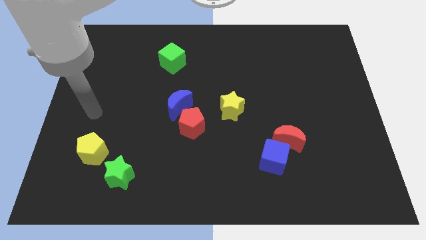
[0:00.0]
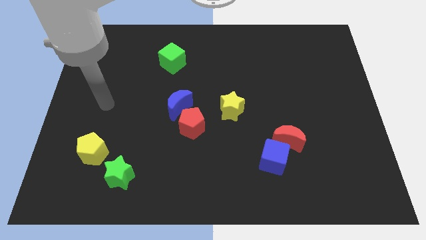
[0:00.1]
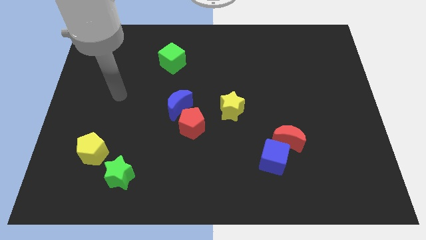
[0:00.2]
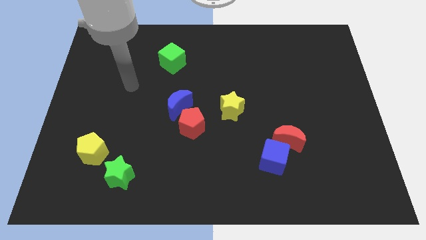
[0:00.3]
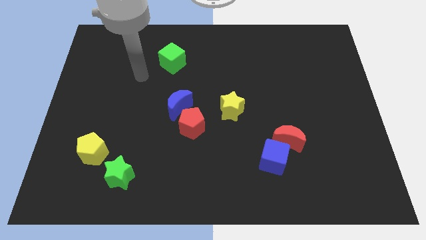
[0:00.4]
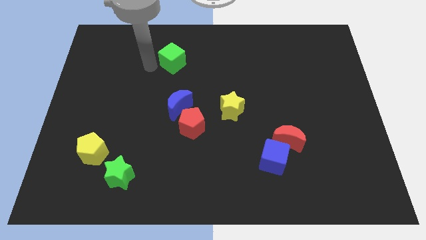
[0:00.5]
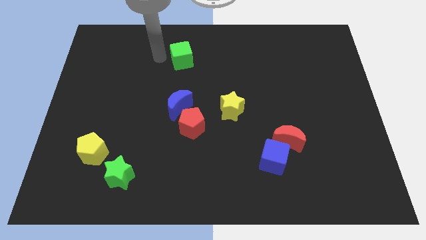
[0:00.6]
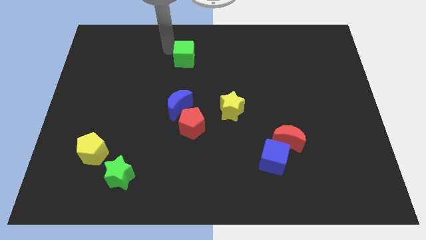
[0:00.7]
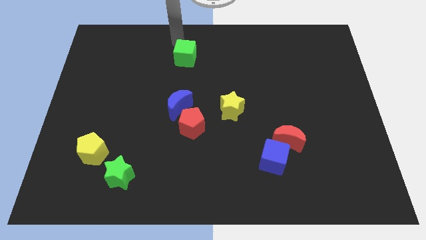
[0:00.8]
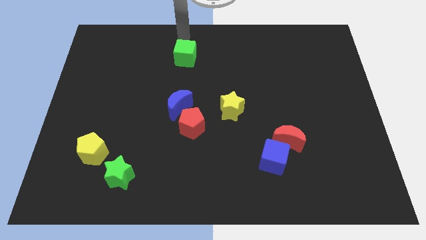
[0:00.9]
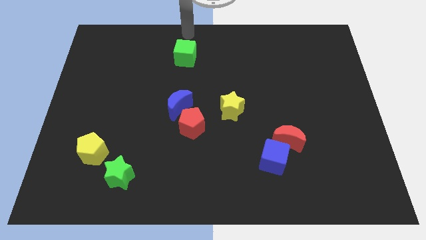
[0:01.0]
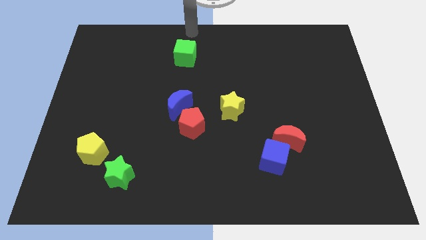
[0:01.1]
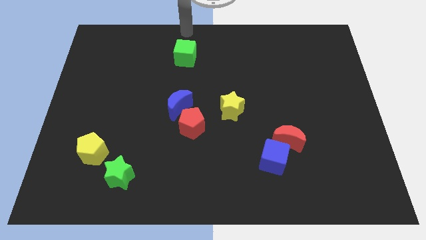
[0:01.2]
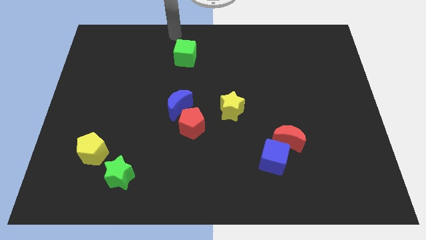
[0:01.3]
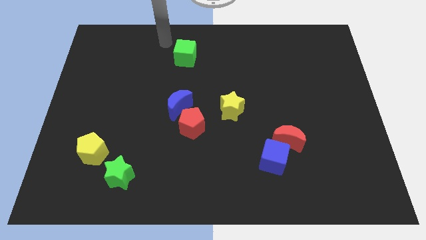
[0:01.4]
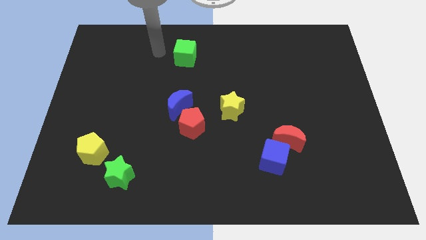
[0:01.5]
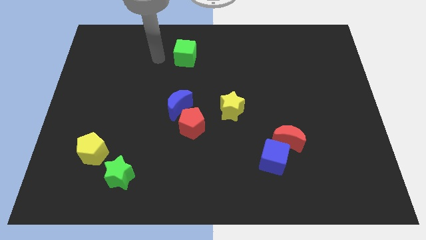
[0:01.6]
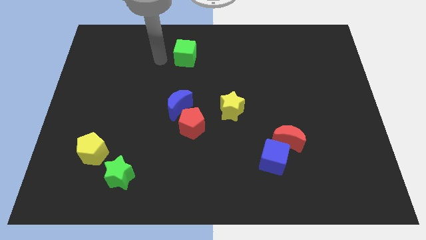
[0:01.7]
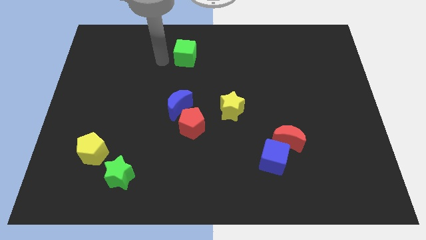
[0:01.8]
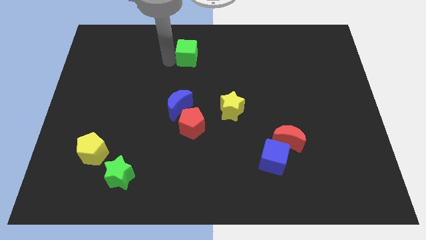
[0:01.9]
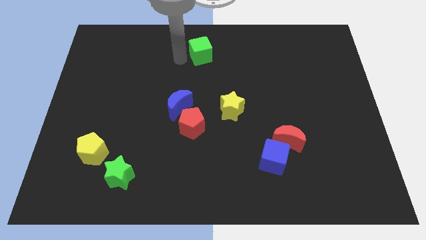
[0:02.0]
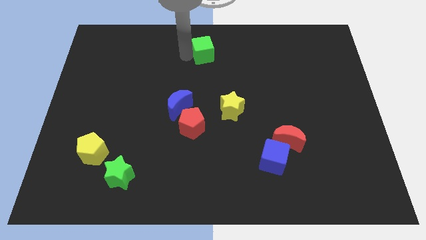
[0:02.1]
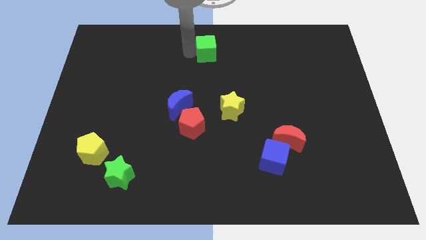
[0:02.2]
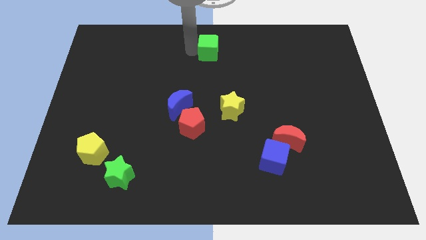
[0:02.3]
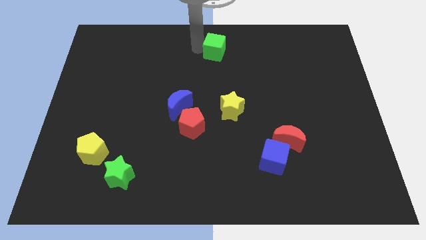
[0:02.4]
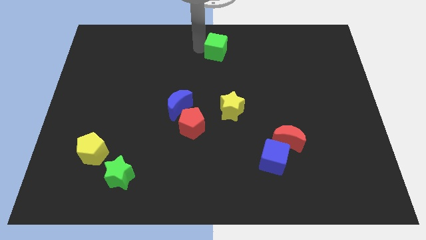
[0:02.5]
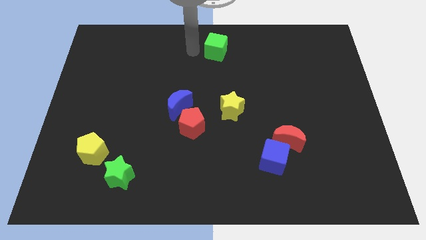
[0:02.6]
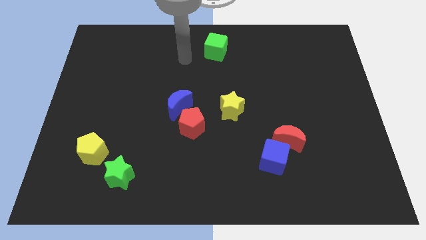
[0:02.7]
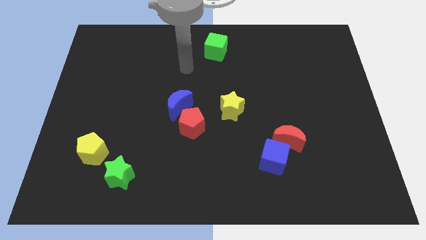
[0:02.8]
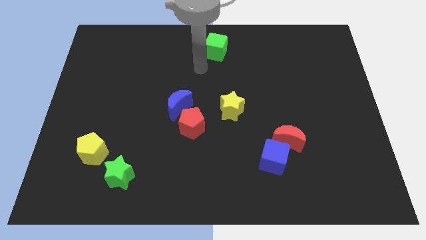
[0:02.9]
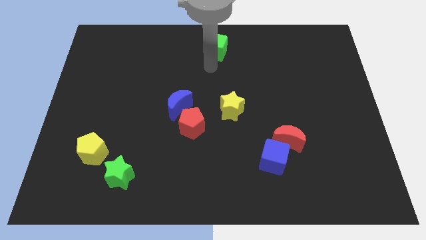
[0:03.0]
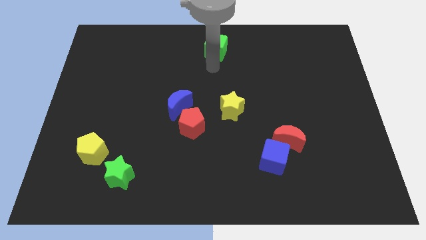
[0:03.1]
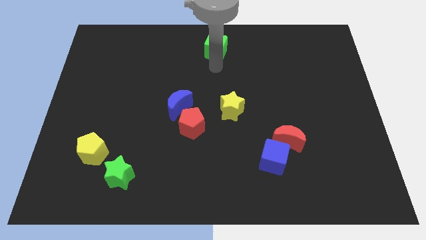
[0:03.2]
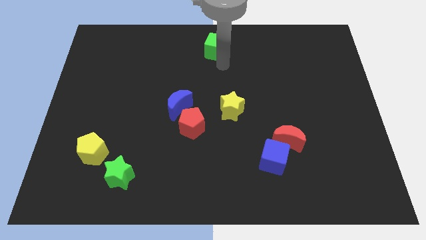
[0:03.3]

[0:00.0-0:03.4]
push the green cube towards the top side of the board

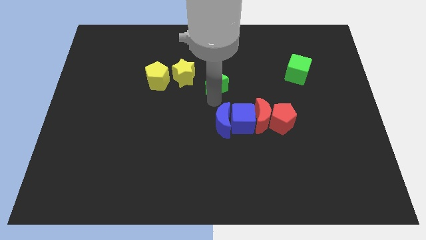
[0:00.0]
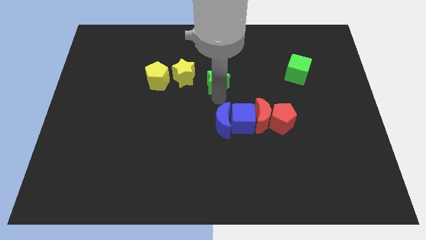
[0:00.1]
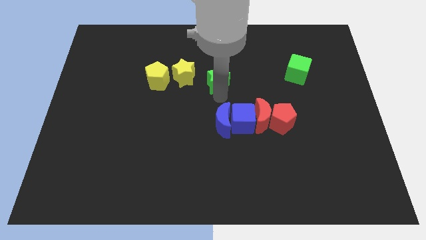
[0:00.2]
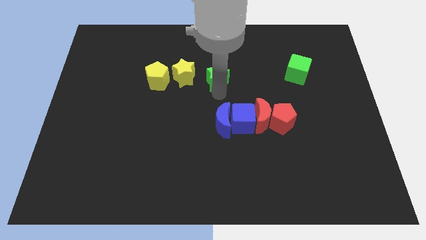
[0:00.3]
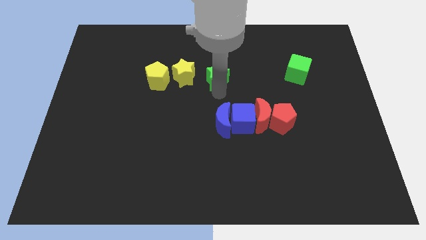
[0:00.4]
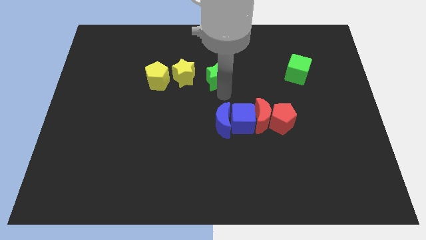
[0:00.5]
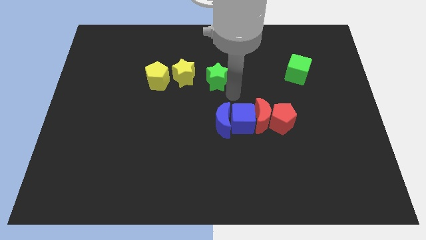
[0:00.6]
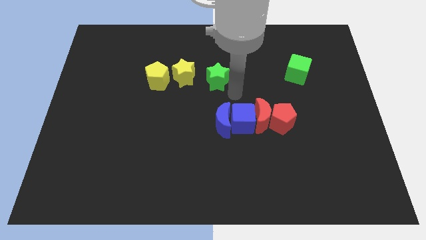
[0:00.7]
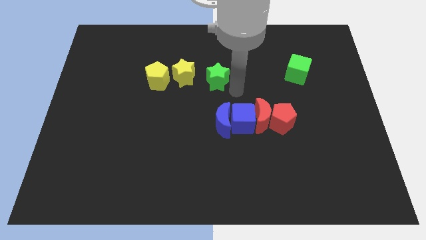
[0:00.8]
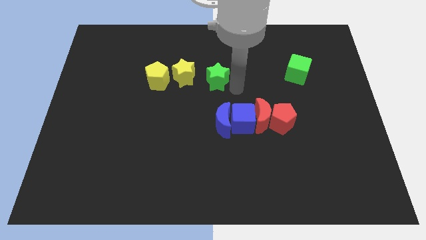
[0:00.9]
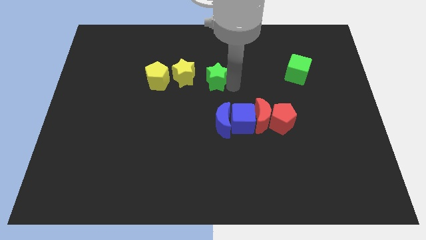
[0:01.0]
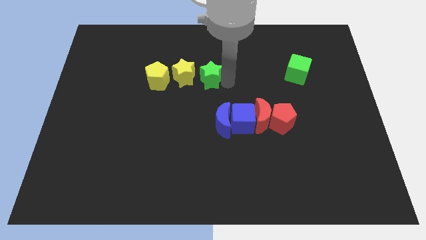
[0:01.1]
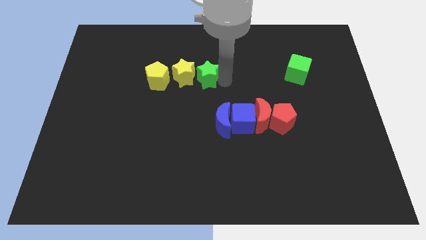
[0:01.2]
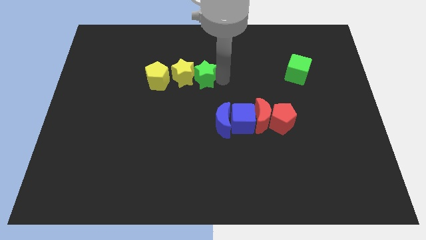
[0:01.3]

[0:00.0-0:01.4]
place the green star at the right side of the yellow star

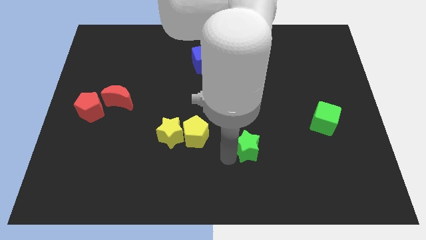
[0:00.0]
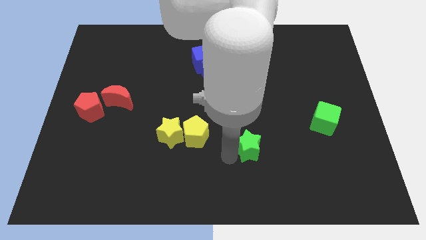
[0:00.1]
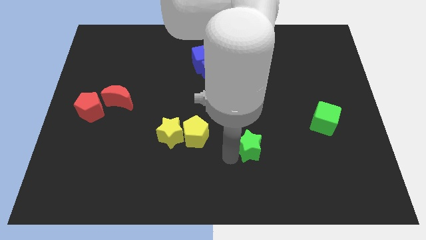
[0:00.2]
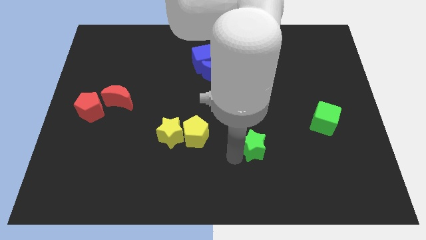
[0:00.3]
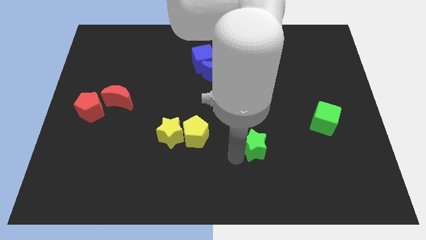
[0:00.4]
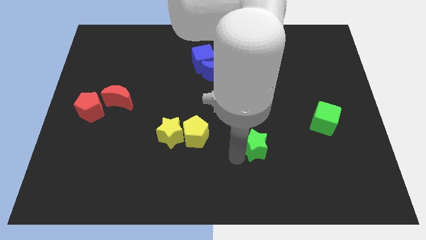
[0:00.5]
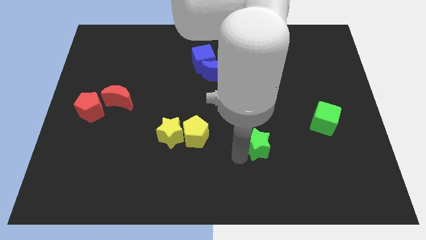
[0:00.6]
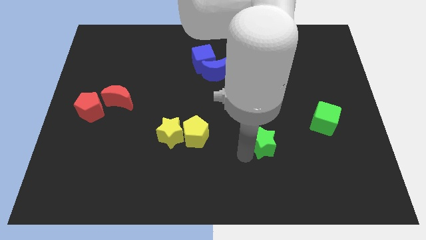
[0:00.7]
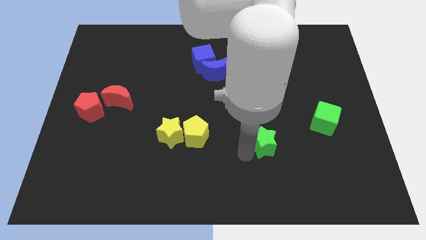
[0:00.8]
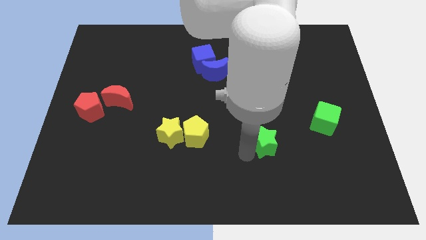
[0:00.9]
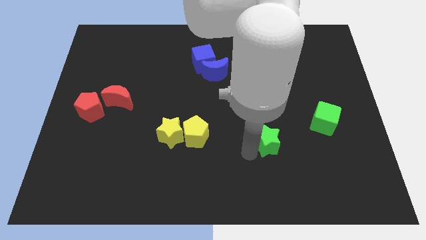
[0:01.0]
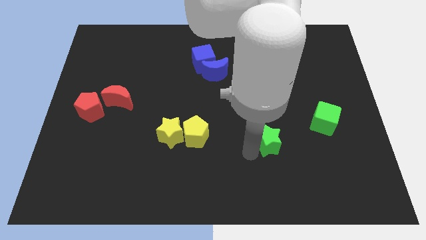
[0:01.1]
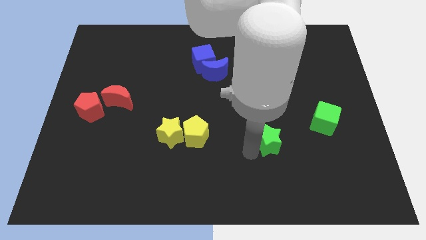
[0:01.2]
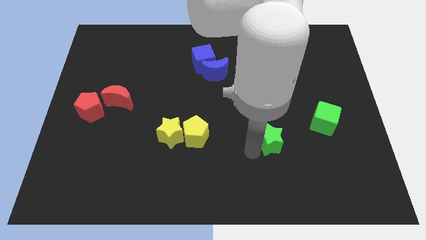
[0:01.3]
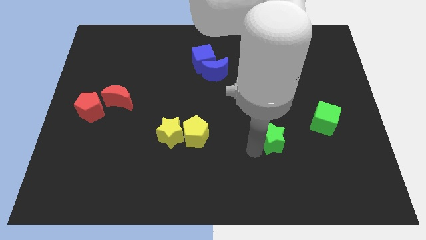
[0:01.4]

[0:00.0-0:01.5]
push the green star towards the green cube

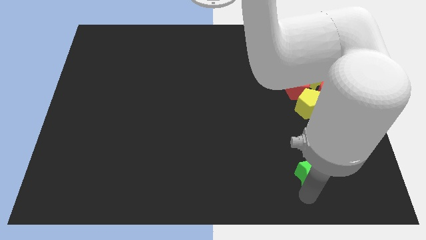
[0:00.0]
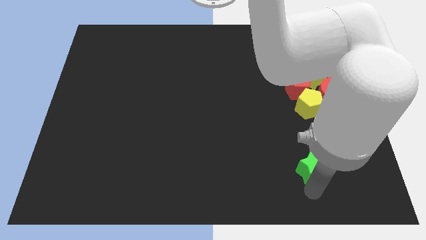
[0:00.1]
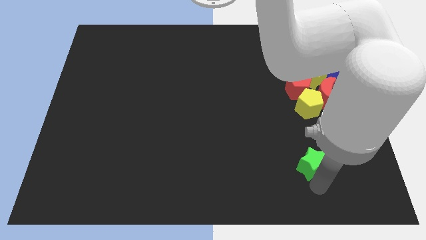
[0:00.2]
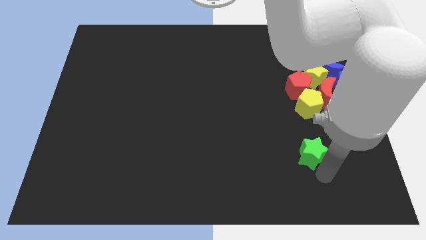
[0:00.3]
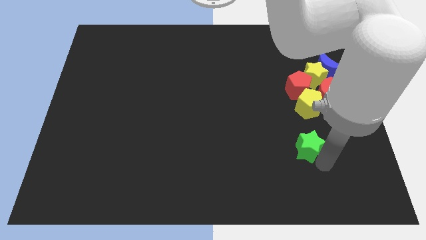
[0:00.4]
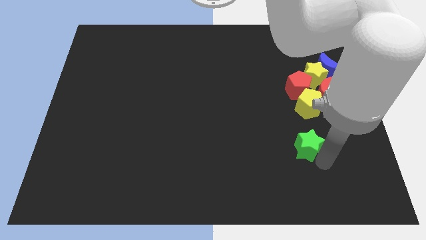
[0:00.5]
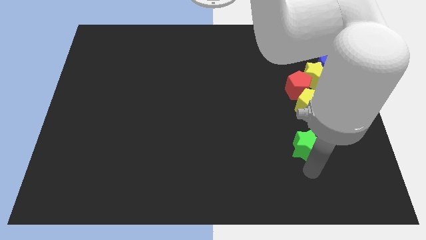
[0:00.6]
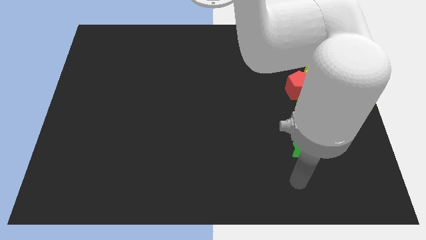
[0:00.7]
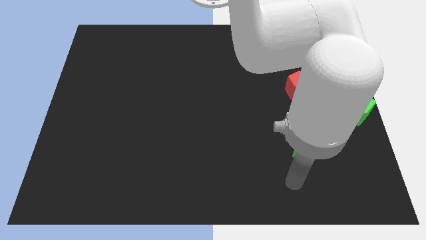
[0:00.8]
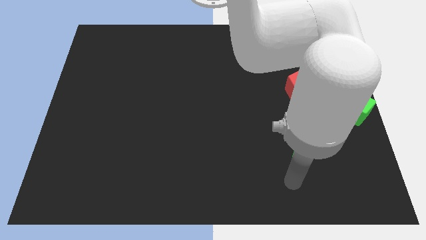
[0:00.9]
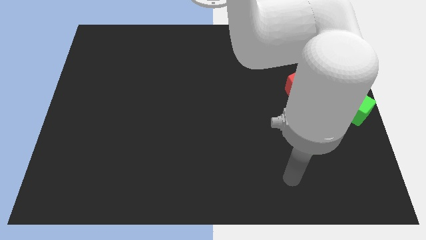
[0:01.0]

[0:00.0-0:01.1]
push green star slightly towards upward

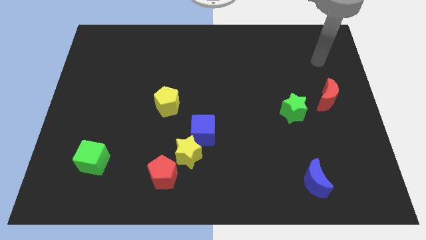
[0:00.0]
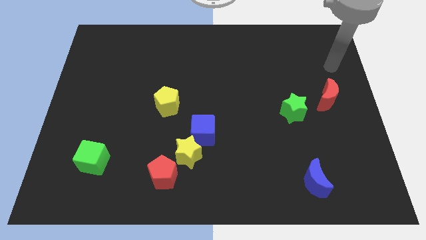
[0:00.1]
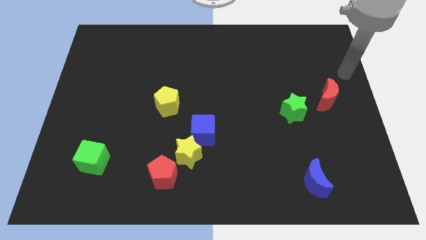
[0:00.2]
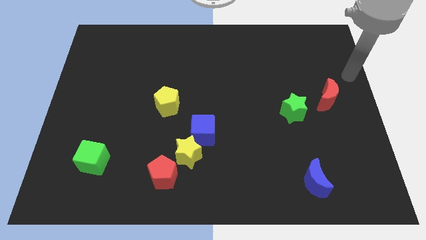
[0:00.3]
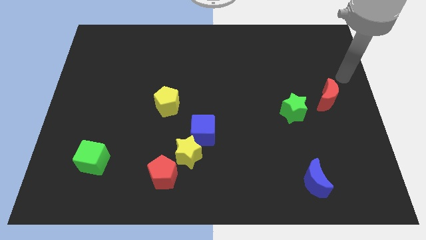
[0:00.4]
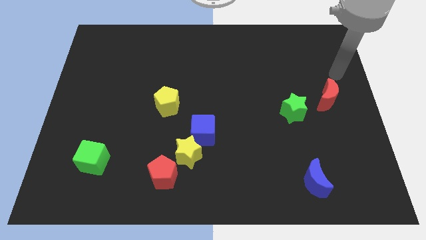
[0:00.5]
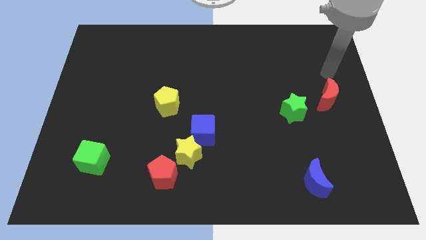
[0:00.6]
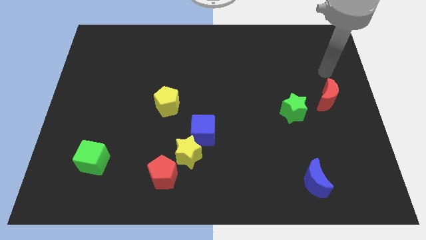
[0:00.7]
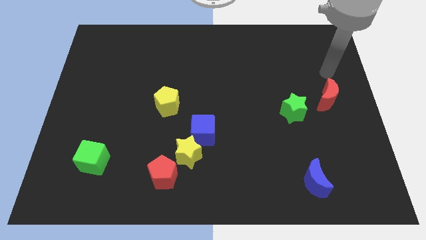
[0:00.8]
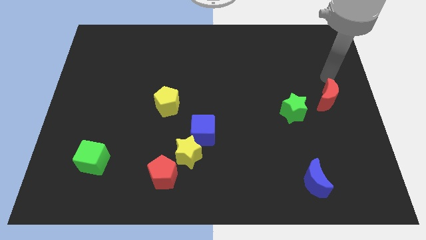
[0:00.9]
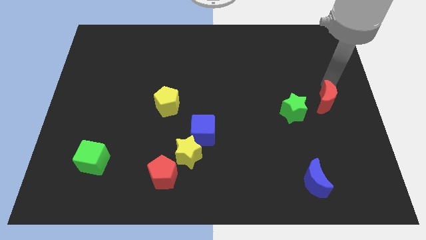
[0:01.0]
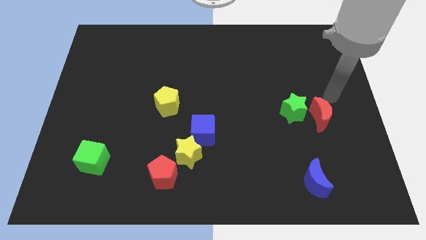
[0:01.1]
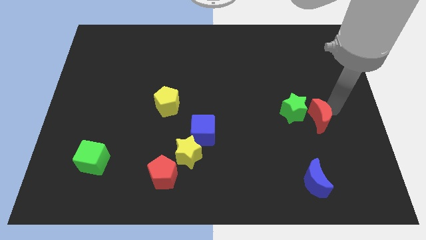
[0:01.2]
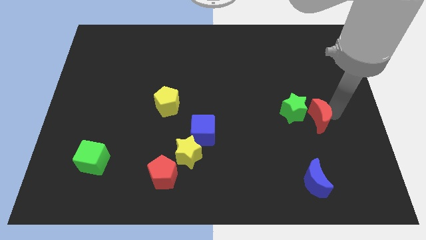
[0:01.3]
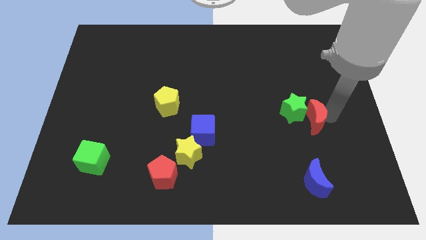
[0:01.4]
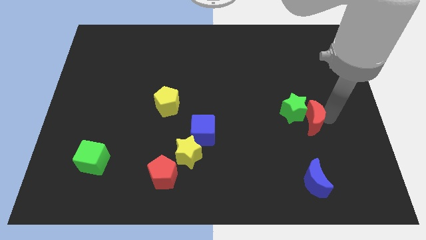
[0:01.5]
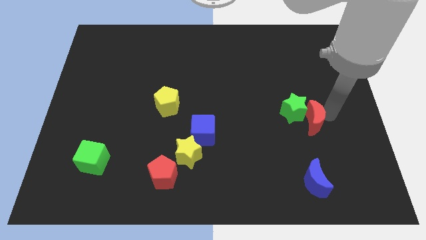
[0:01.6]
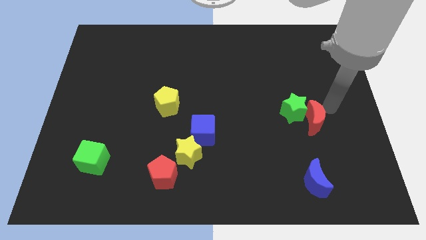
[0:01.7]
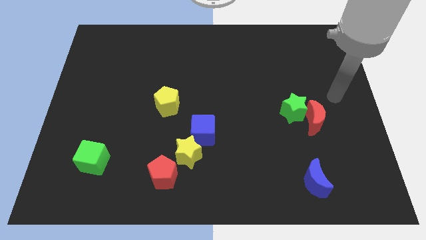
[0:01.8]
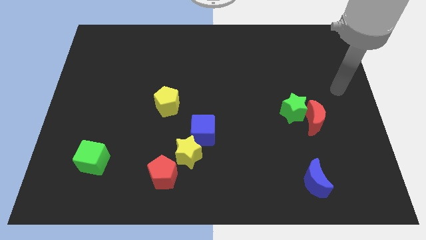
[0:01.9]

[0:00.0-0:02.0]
move the red moon into the green star
